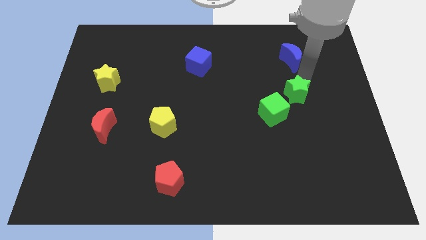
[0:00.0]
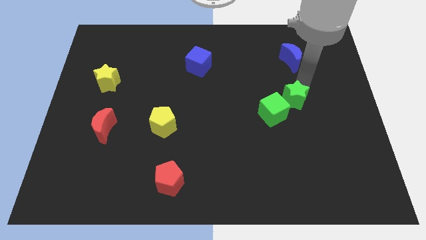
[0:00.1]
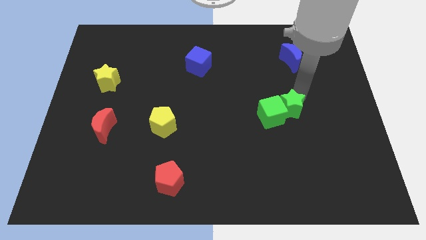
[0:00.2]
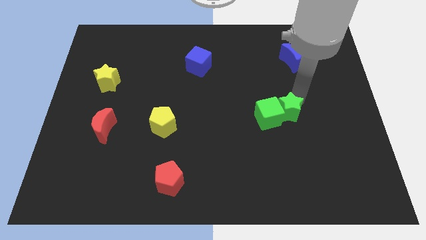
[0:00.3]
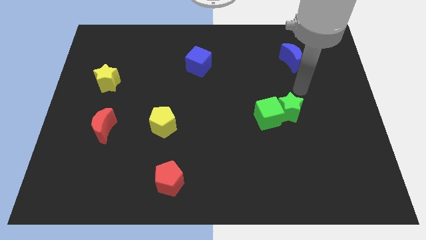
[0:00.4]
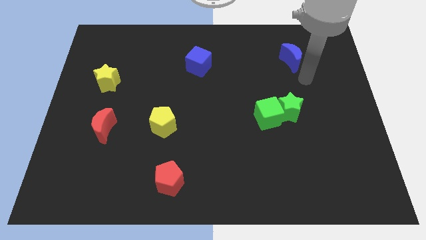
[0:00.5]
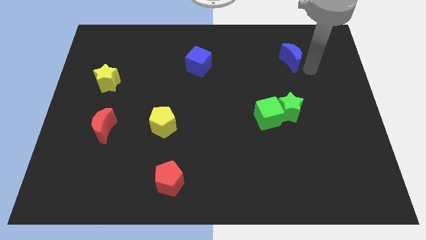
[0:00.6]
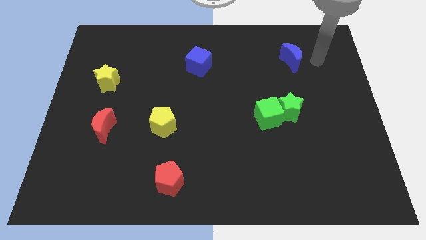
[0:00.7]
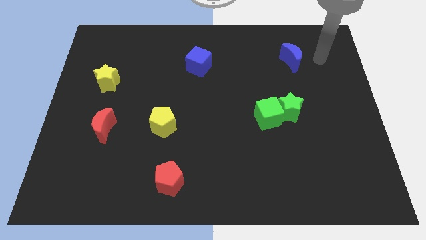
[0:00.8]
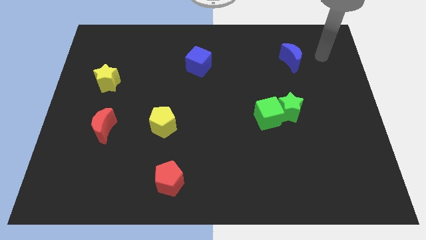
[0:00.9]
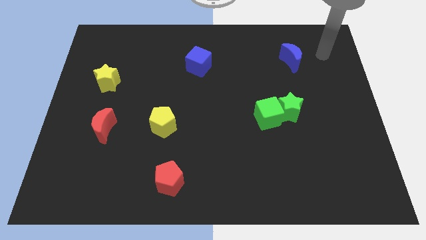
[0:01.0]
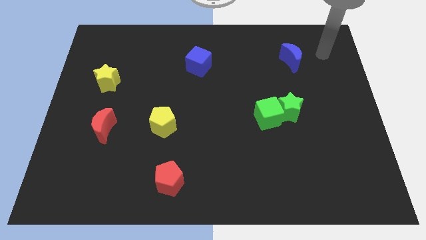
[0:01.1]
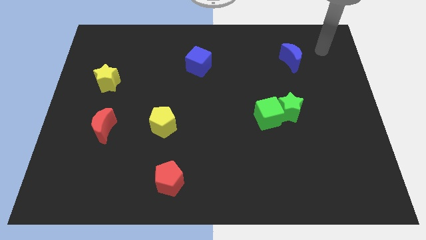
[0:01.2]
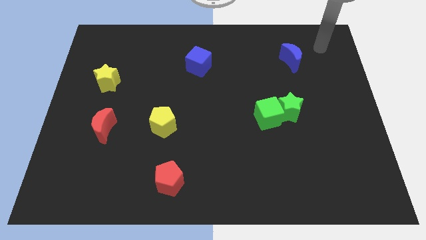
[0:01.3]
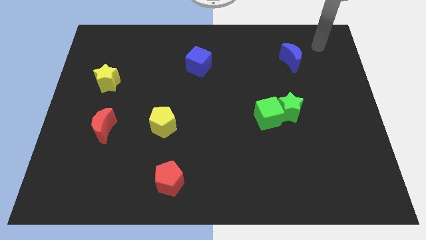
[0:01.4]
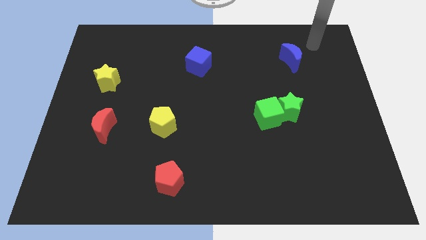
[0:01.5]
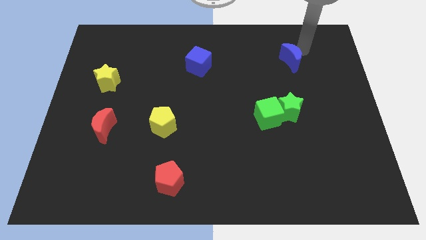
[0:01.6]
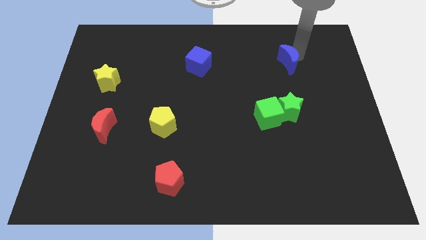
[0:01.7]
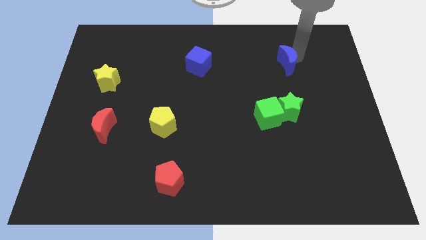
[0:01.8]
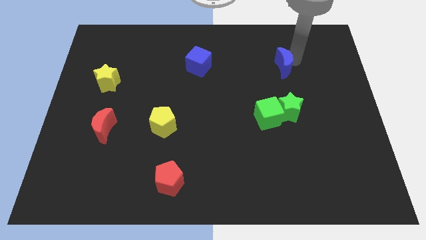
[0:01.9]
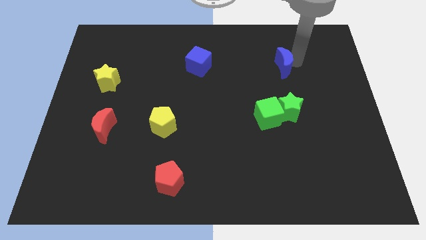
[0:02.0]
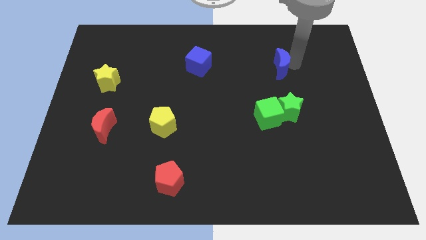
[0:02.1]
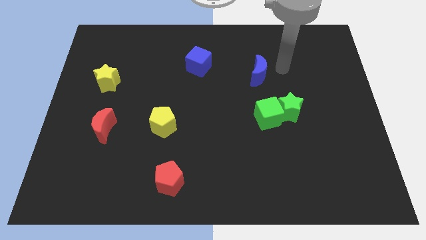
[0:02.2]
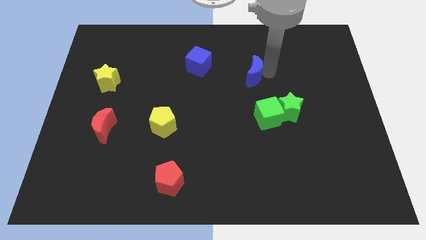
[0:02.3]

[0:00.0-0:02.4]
place the blue moon above the green cube

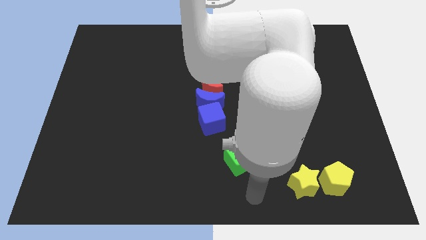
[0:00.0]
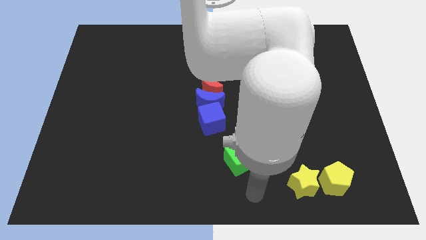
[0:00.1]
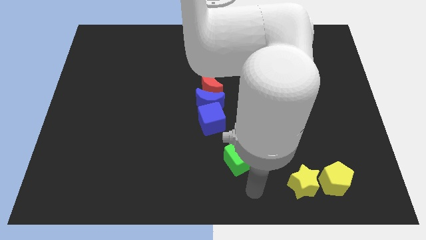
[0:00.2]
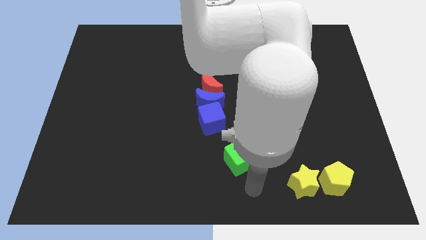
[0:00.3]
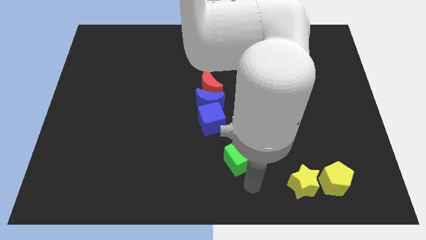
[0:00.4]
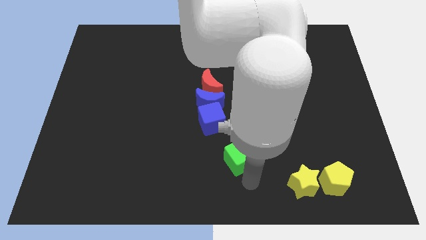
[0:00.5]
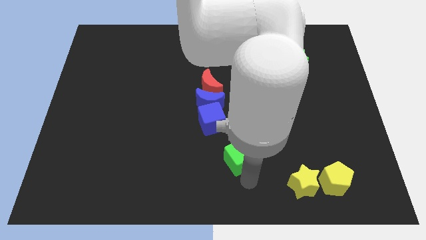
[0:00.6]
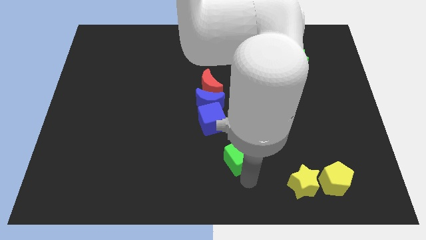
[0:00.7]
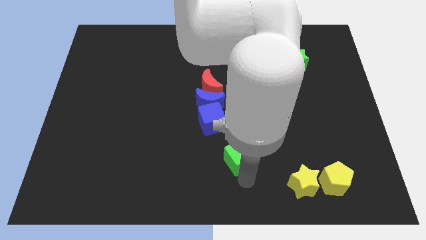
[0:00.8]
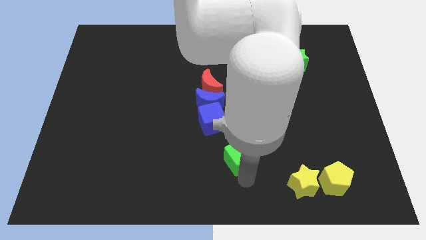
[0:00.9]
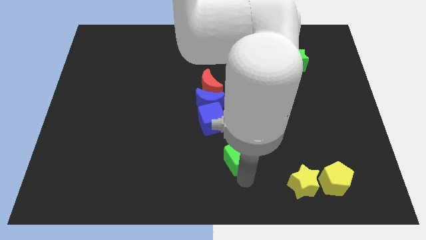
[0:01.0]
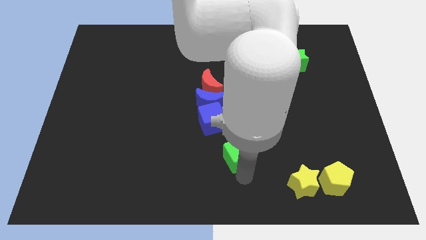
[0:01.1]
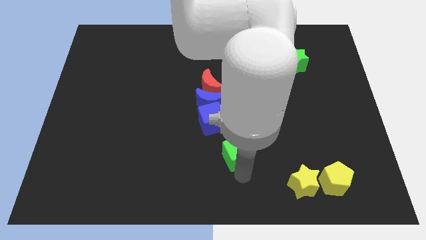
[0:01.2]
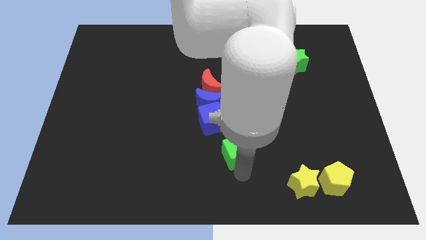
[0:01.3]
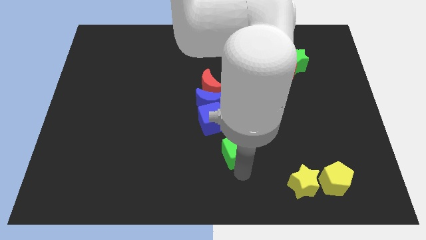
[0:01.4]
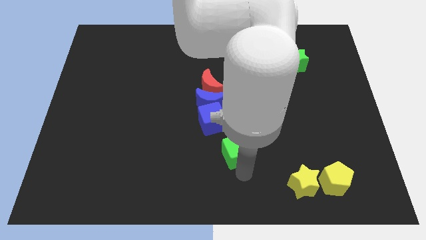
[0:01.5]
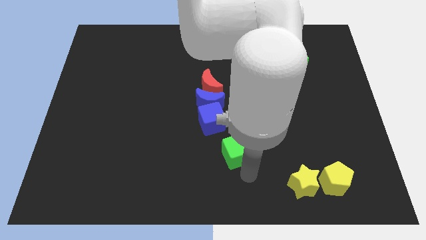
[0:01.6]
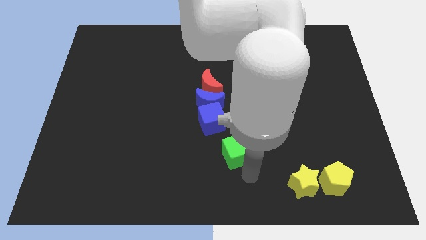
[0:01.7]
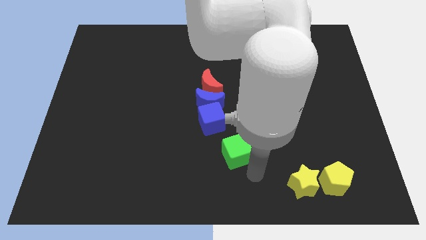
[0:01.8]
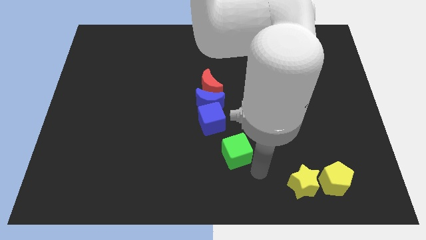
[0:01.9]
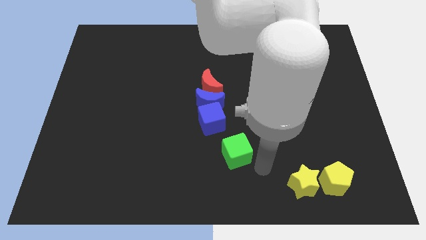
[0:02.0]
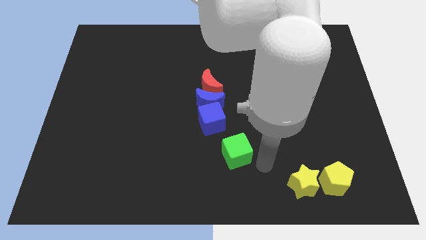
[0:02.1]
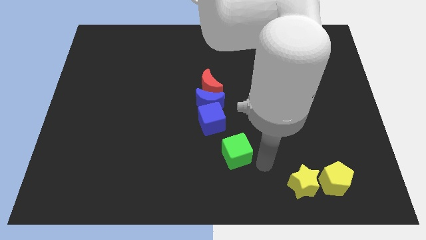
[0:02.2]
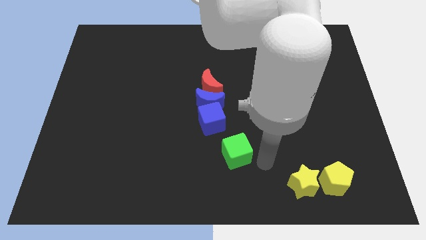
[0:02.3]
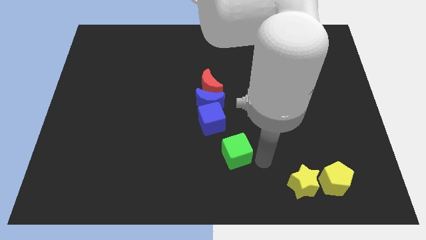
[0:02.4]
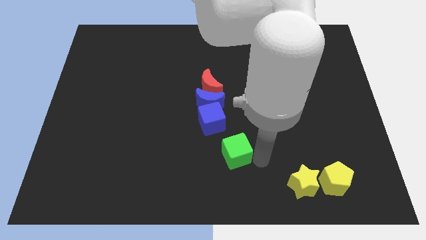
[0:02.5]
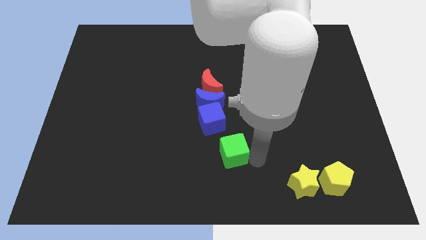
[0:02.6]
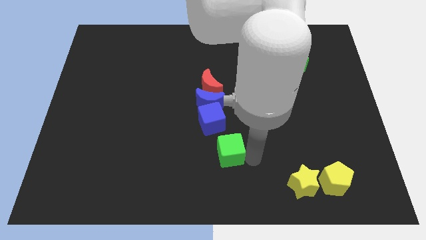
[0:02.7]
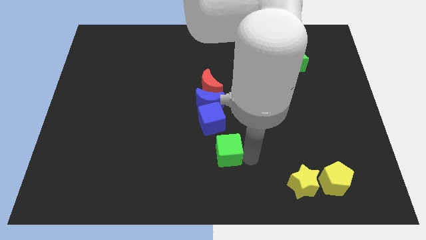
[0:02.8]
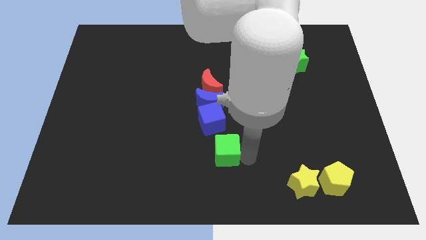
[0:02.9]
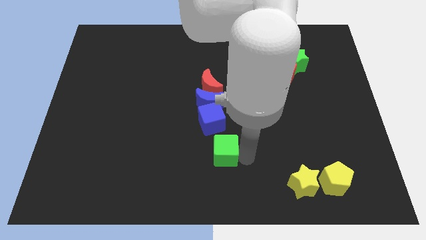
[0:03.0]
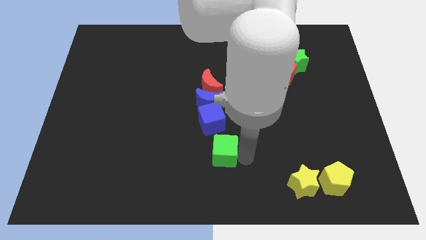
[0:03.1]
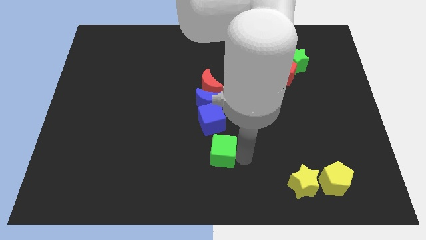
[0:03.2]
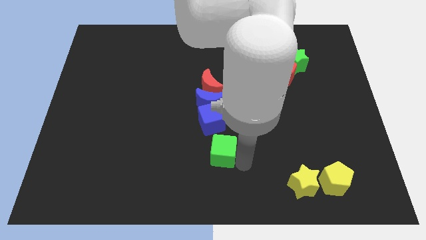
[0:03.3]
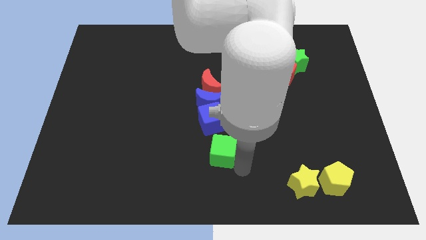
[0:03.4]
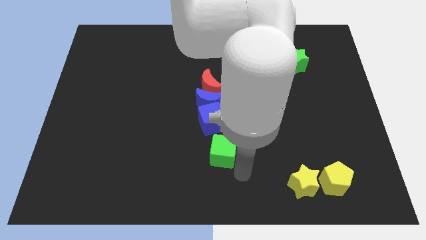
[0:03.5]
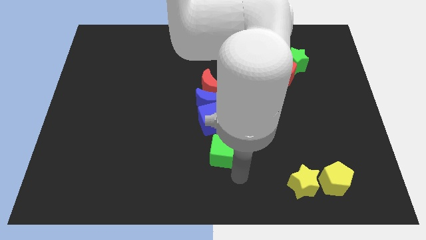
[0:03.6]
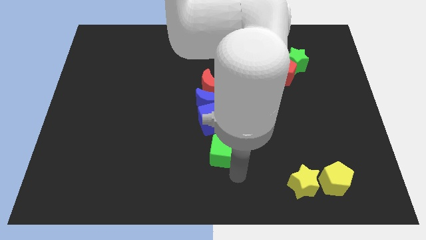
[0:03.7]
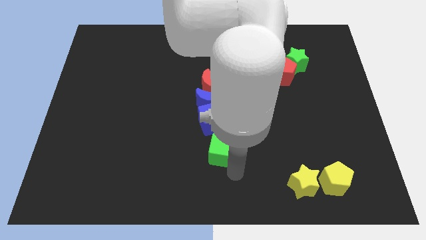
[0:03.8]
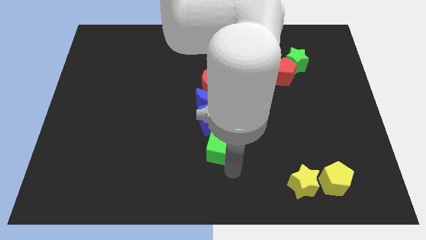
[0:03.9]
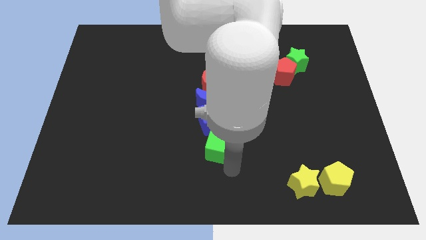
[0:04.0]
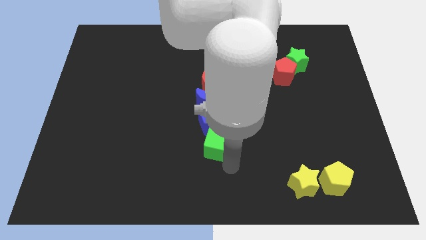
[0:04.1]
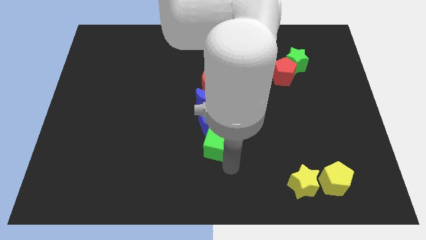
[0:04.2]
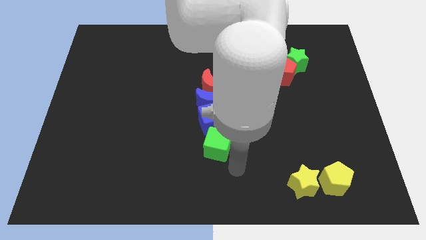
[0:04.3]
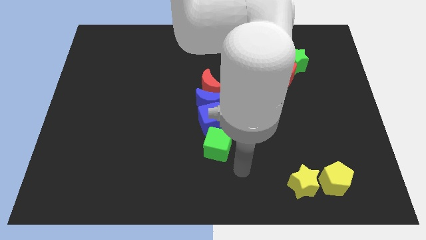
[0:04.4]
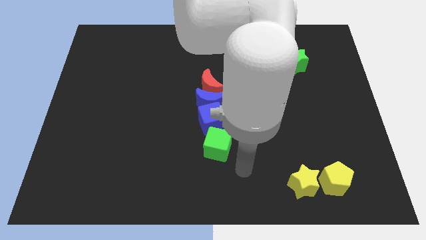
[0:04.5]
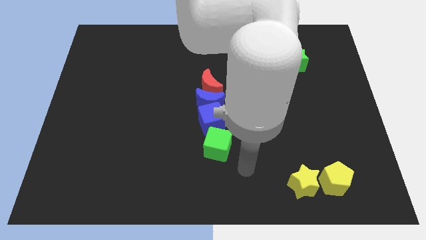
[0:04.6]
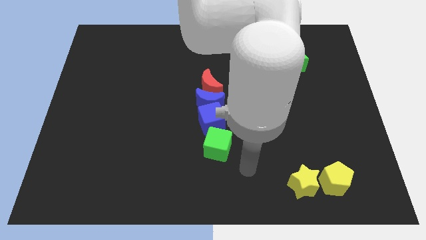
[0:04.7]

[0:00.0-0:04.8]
place the green cube below the blue cube

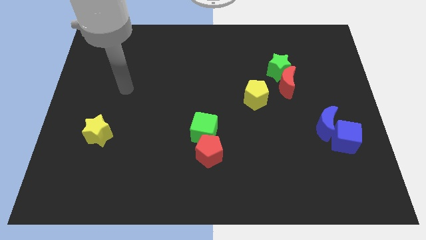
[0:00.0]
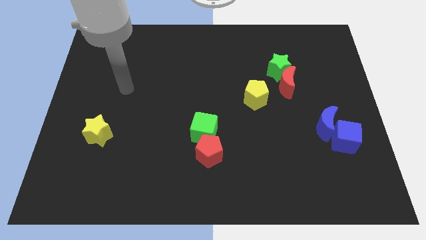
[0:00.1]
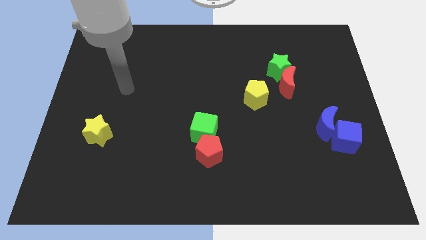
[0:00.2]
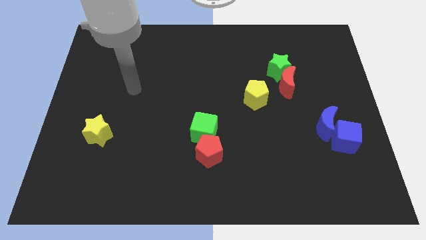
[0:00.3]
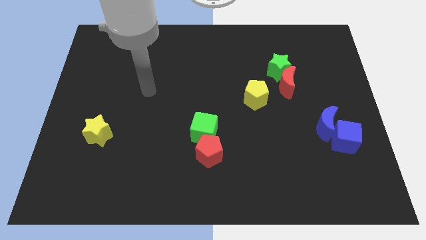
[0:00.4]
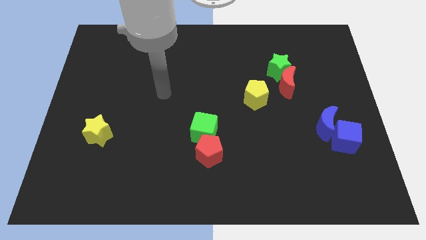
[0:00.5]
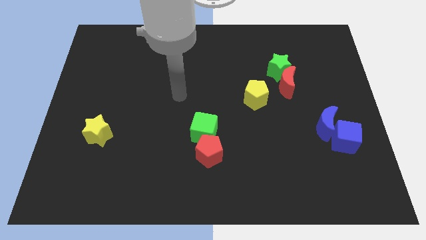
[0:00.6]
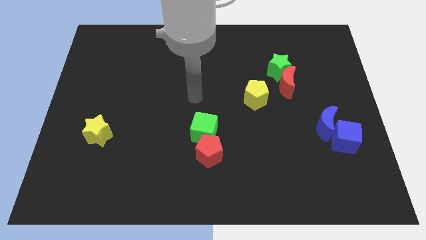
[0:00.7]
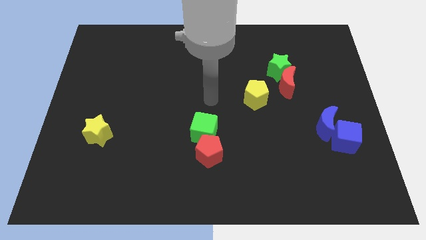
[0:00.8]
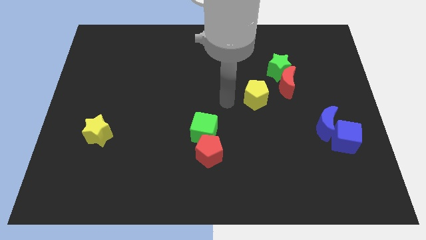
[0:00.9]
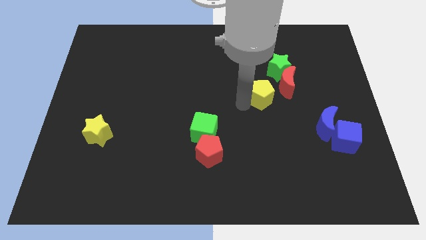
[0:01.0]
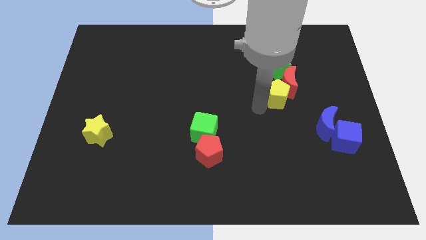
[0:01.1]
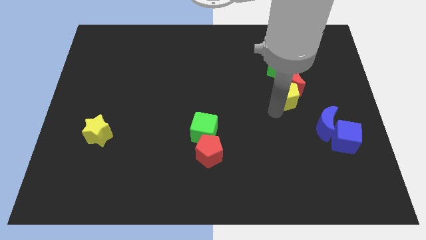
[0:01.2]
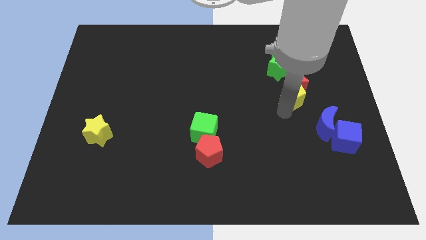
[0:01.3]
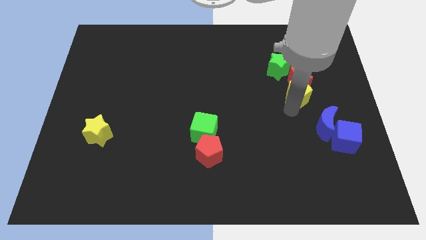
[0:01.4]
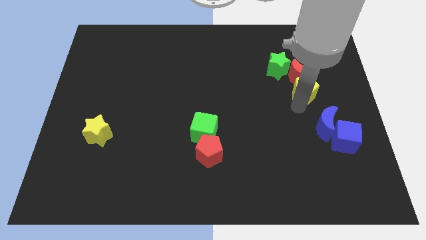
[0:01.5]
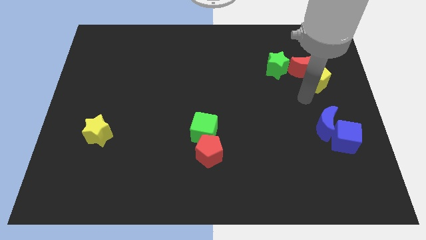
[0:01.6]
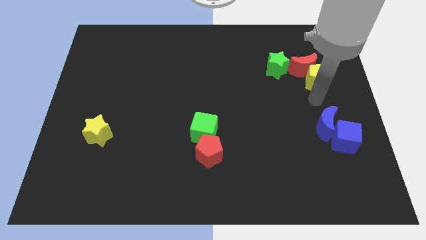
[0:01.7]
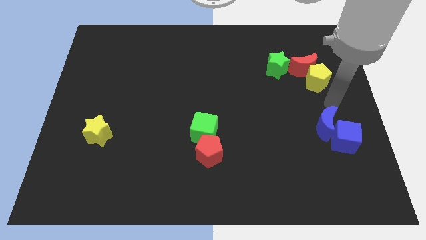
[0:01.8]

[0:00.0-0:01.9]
push the yellow pentagon into the red crescent
